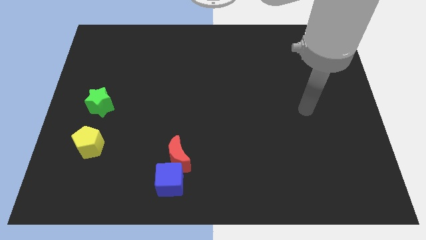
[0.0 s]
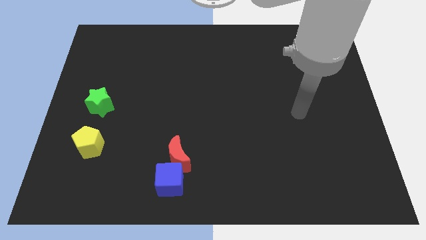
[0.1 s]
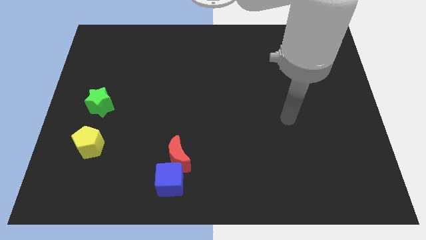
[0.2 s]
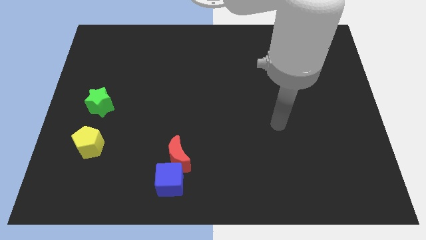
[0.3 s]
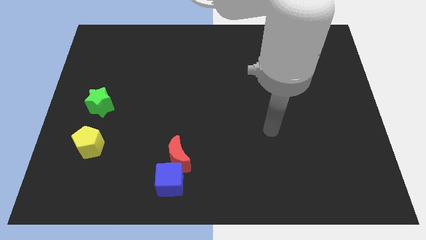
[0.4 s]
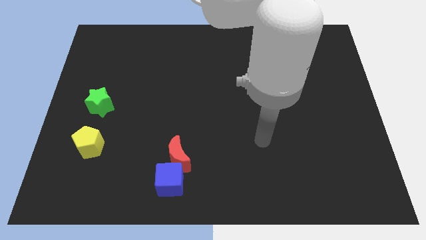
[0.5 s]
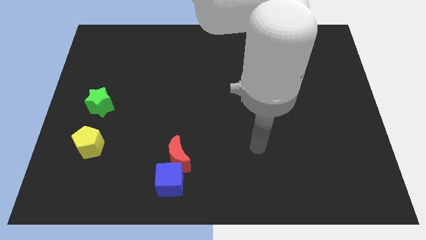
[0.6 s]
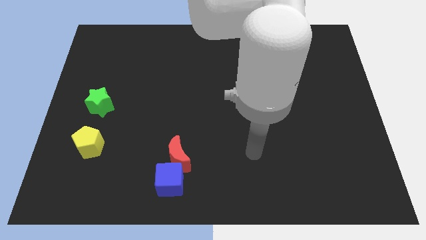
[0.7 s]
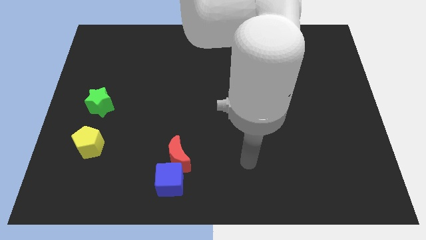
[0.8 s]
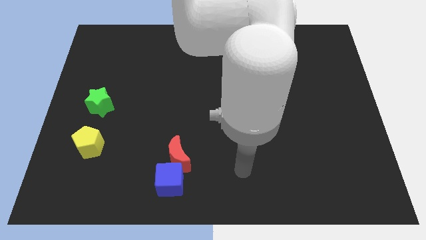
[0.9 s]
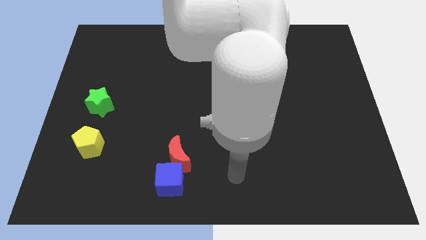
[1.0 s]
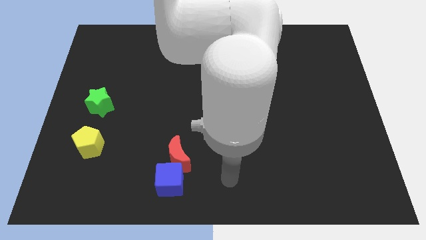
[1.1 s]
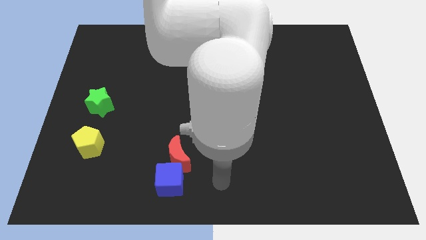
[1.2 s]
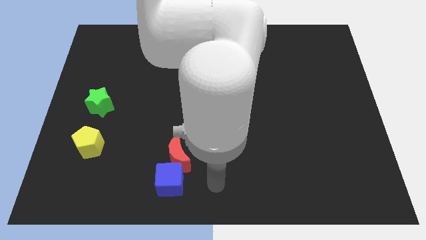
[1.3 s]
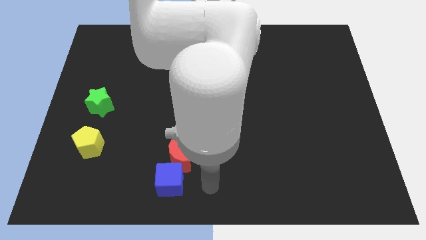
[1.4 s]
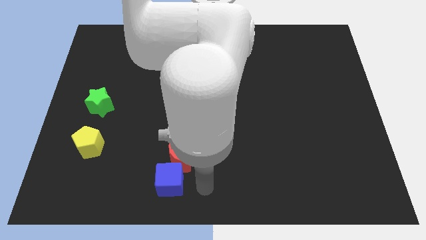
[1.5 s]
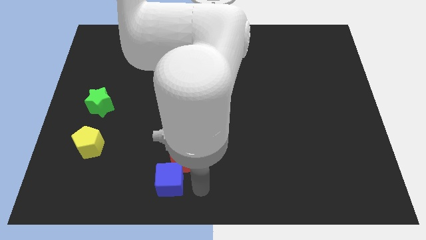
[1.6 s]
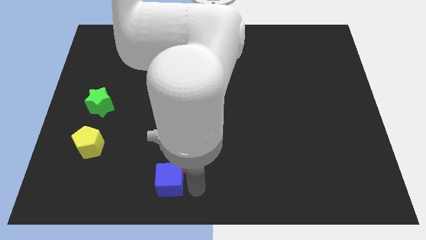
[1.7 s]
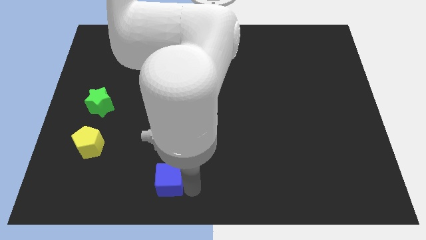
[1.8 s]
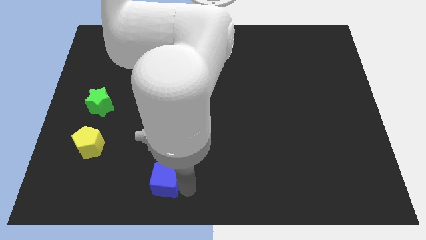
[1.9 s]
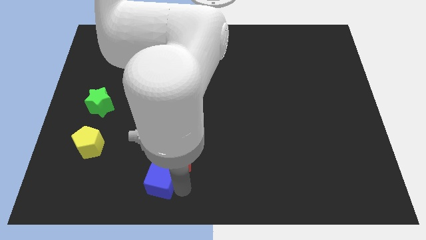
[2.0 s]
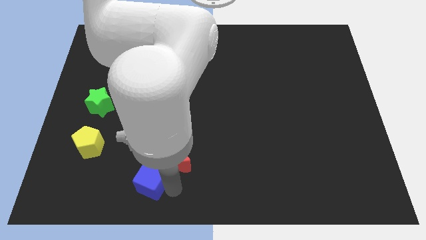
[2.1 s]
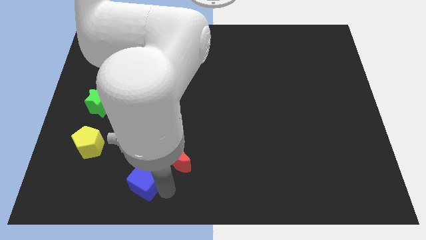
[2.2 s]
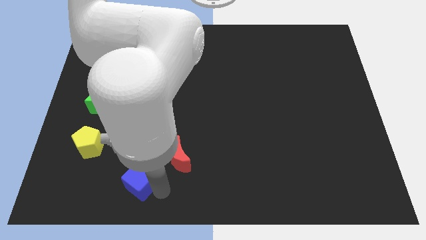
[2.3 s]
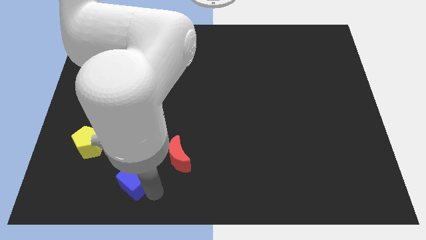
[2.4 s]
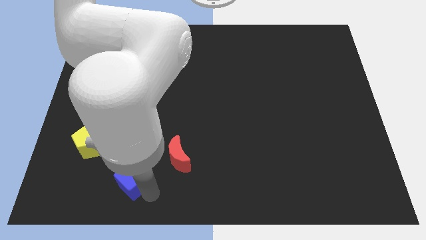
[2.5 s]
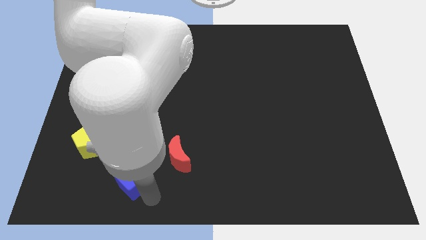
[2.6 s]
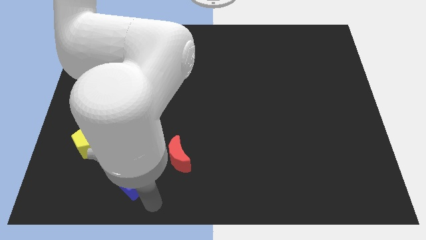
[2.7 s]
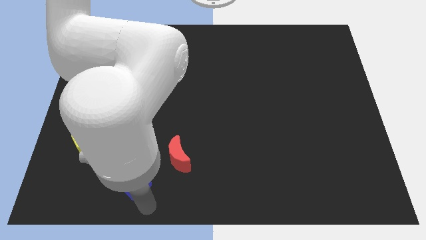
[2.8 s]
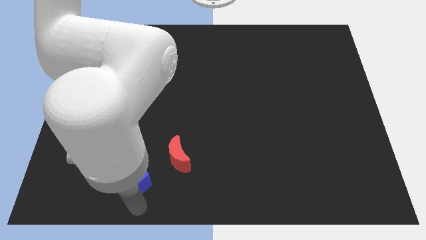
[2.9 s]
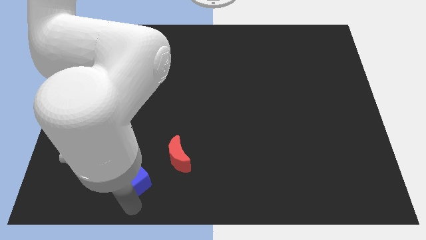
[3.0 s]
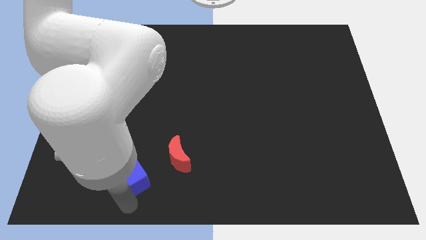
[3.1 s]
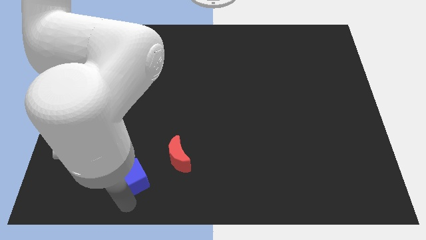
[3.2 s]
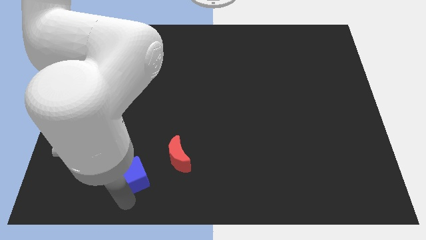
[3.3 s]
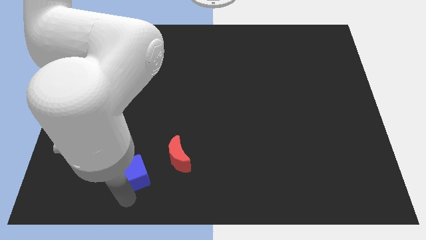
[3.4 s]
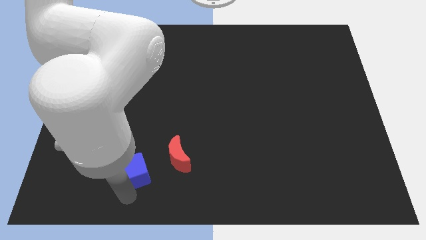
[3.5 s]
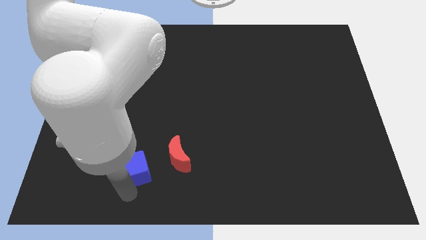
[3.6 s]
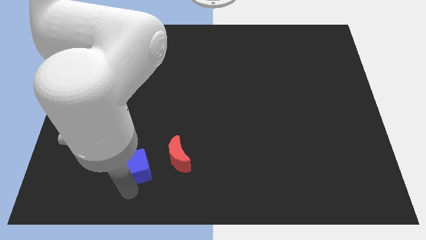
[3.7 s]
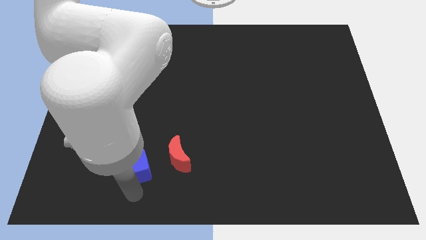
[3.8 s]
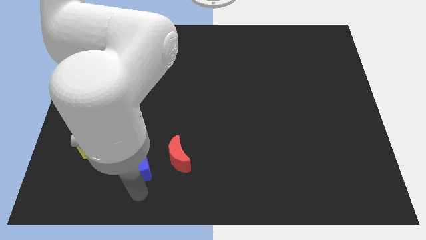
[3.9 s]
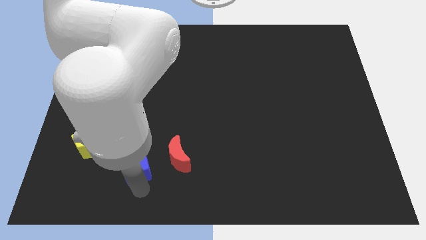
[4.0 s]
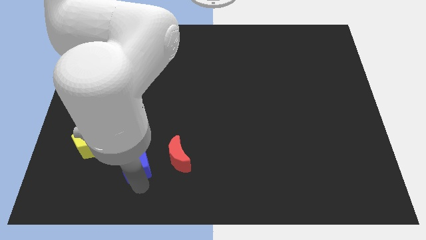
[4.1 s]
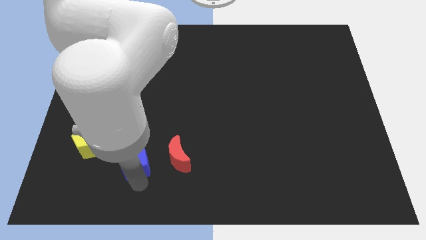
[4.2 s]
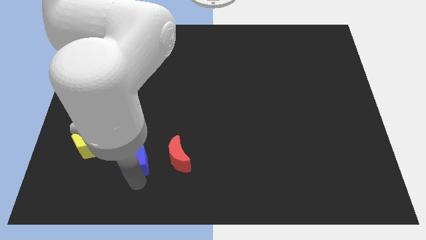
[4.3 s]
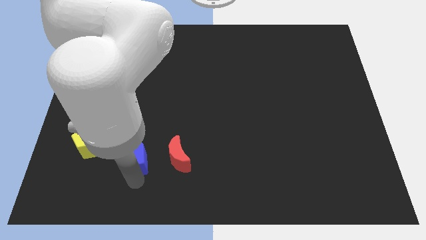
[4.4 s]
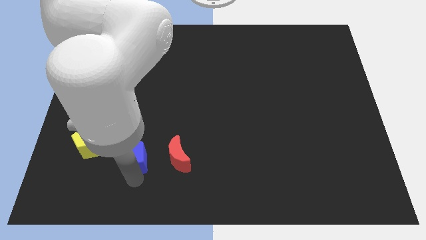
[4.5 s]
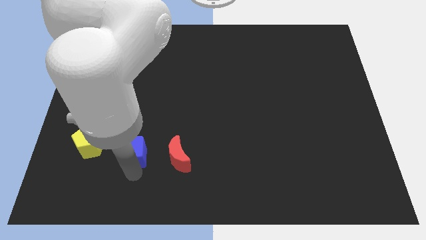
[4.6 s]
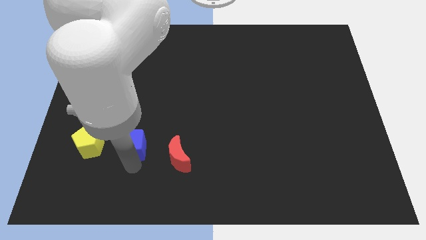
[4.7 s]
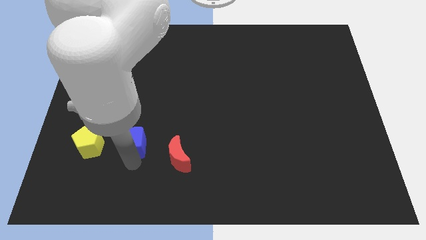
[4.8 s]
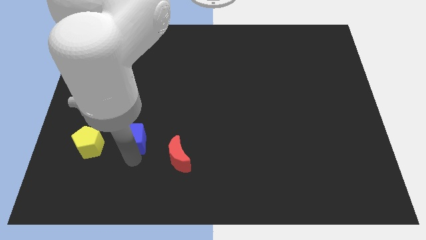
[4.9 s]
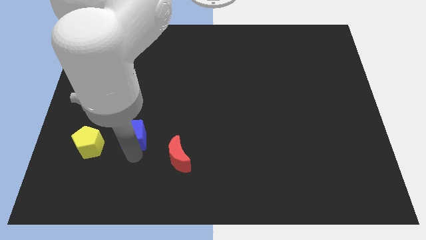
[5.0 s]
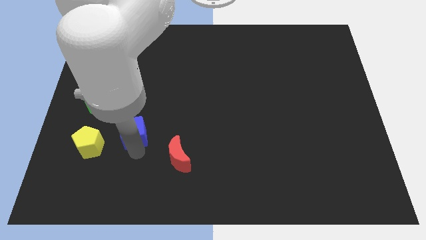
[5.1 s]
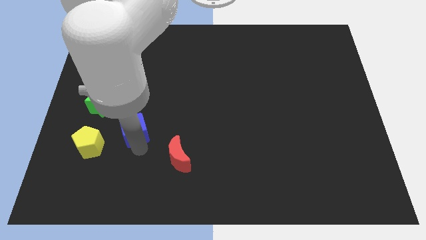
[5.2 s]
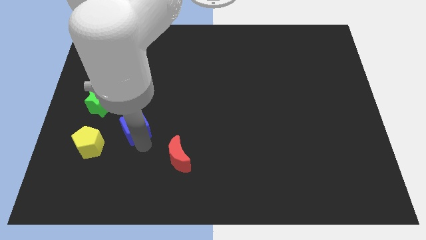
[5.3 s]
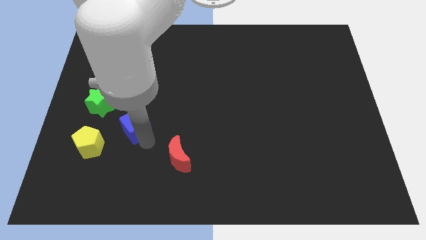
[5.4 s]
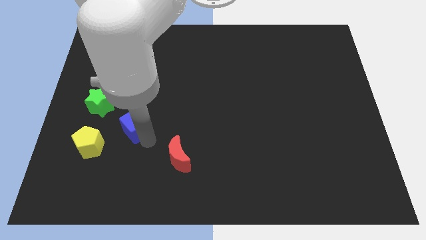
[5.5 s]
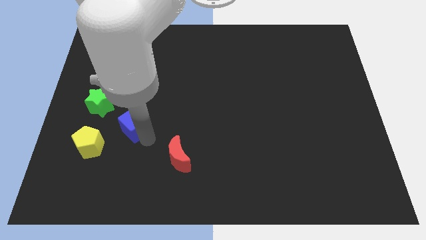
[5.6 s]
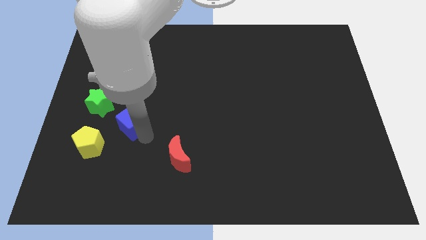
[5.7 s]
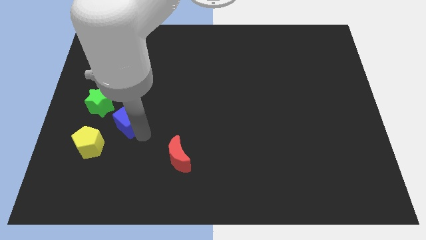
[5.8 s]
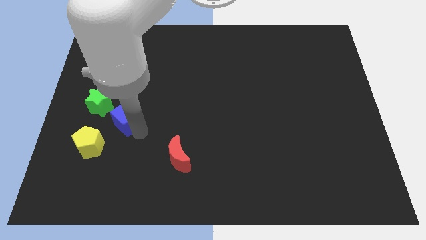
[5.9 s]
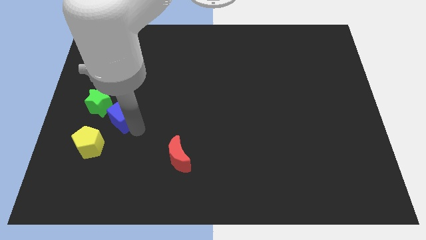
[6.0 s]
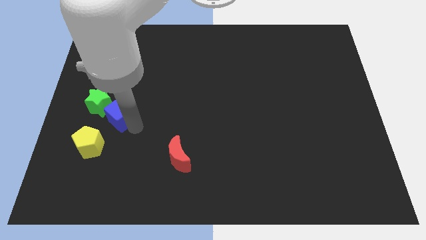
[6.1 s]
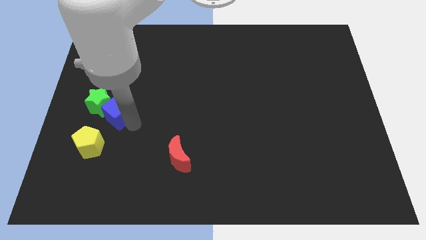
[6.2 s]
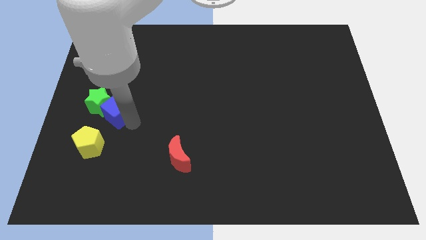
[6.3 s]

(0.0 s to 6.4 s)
move the blue block close to the green star

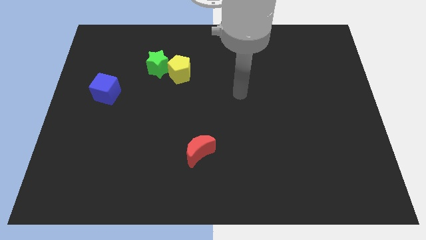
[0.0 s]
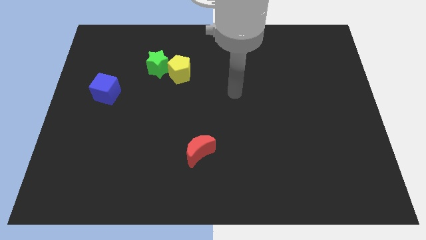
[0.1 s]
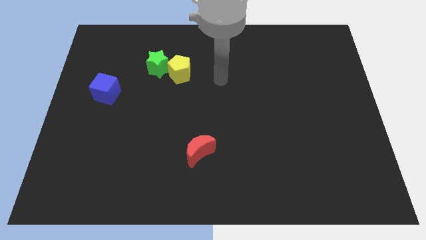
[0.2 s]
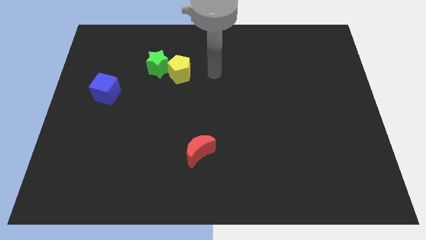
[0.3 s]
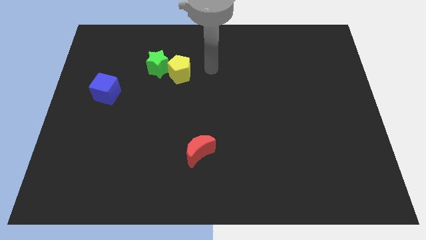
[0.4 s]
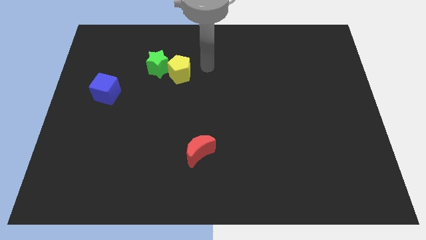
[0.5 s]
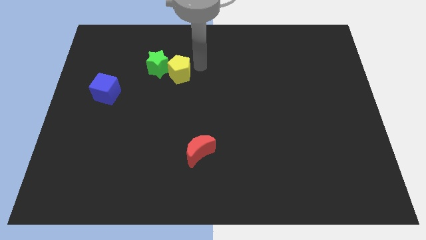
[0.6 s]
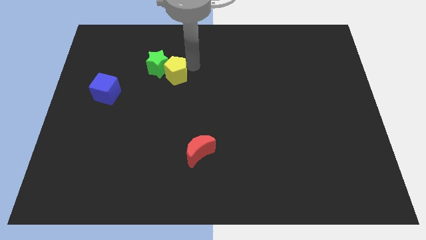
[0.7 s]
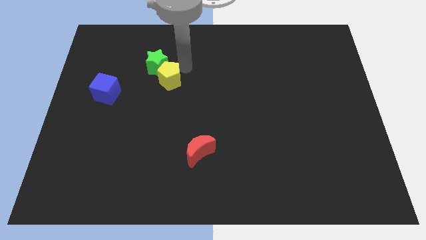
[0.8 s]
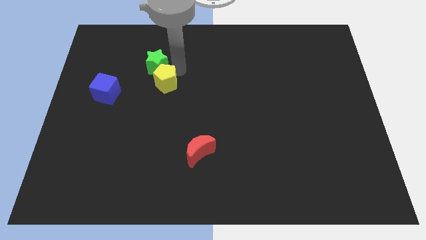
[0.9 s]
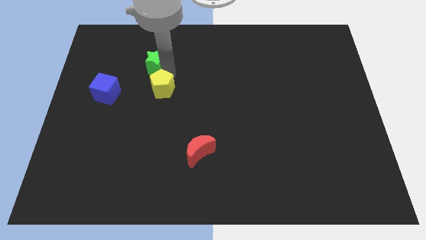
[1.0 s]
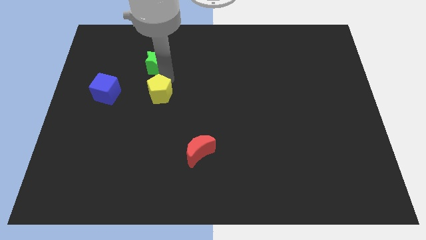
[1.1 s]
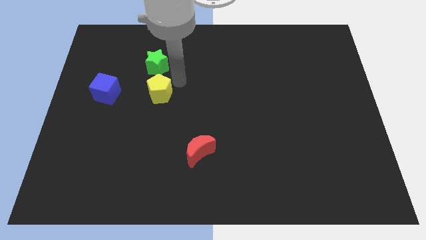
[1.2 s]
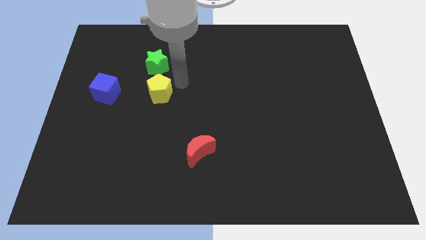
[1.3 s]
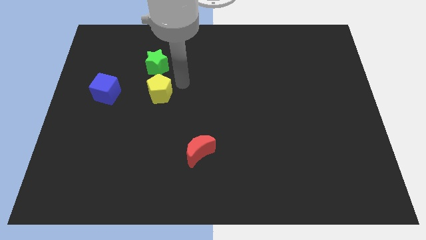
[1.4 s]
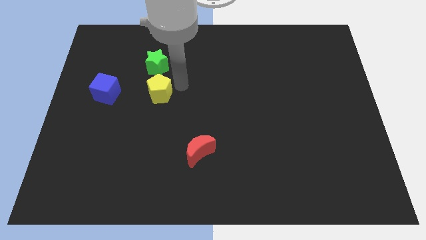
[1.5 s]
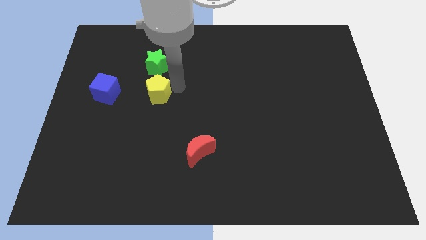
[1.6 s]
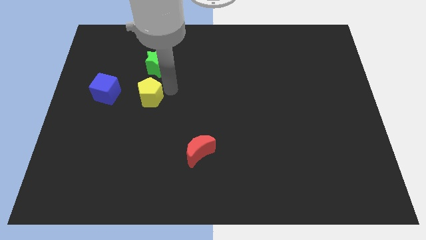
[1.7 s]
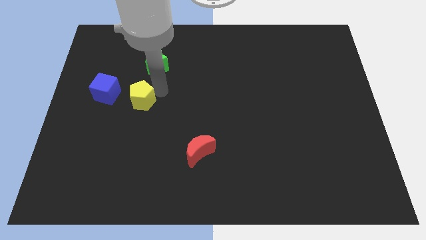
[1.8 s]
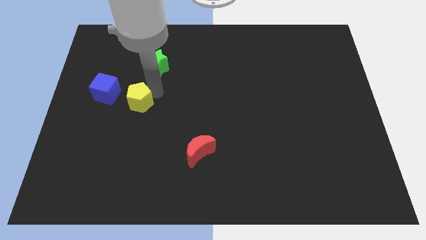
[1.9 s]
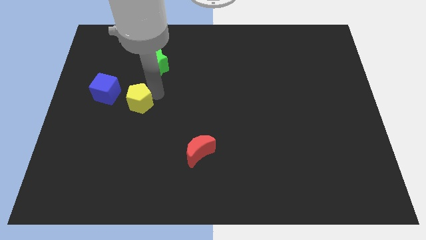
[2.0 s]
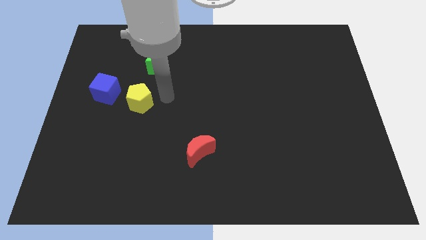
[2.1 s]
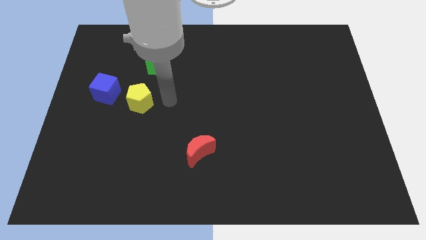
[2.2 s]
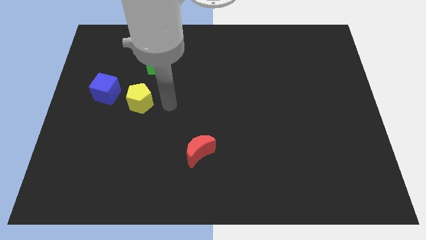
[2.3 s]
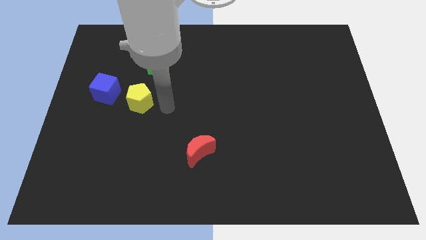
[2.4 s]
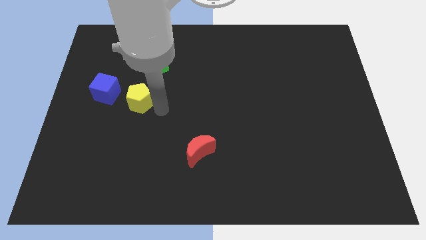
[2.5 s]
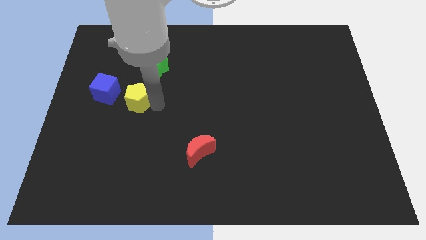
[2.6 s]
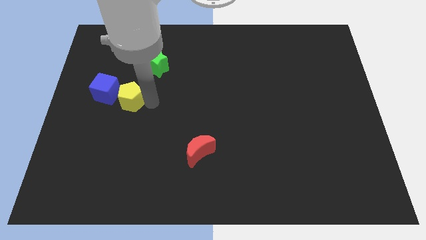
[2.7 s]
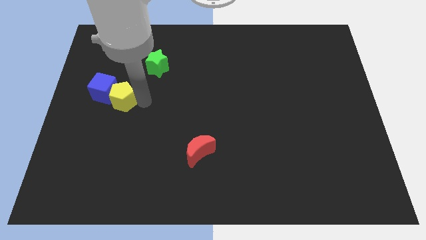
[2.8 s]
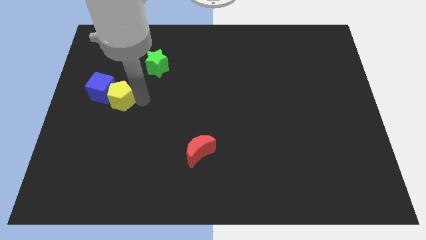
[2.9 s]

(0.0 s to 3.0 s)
put the pentagon close to the blue block
